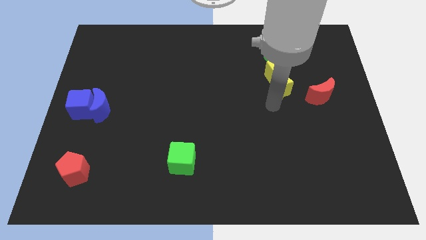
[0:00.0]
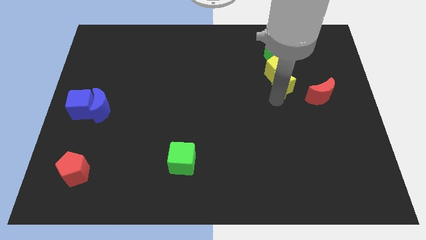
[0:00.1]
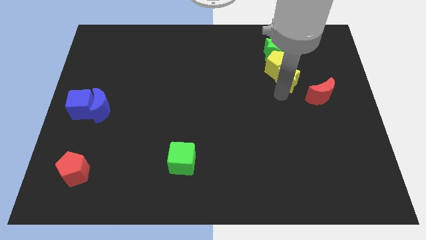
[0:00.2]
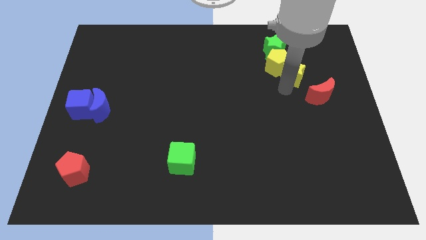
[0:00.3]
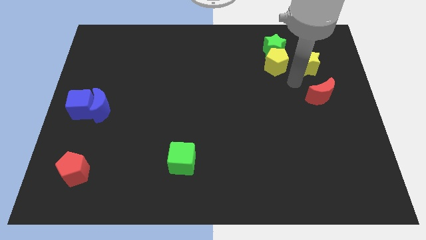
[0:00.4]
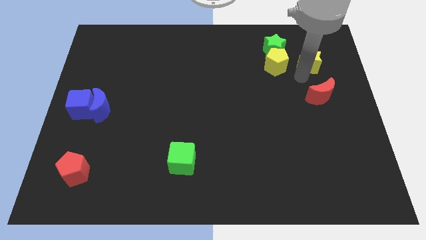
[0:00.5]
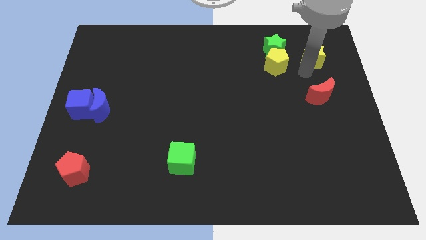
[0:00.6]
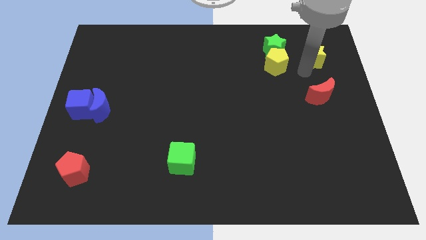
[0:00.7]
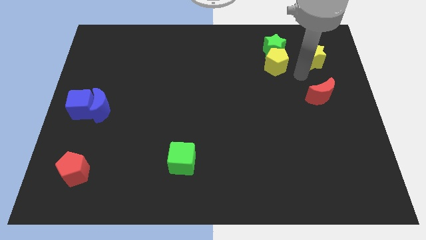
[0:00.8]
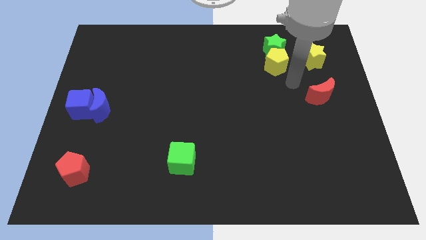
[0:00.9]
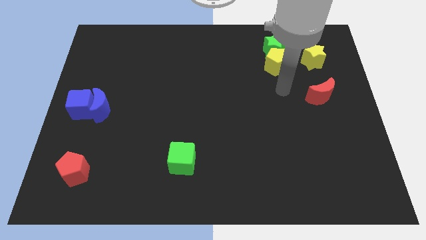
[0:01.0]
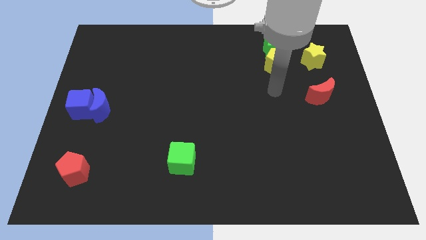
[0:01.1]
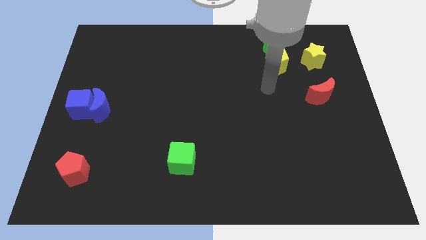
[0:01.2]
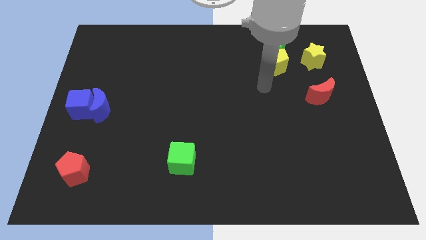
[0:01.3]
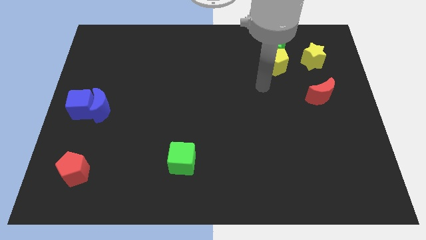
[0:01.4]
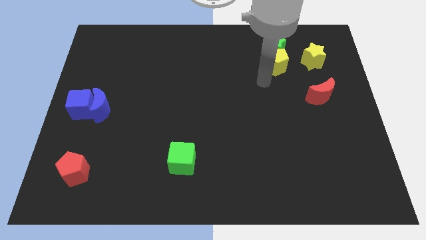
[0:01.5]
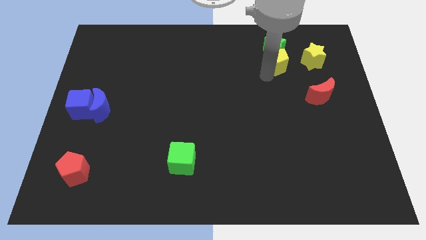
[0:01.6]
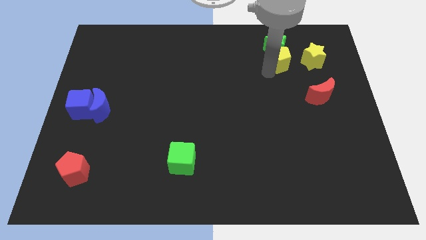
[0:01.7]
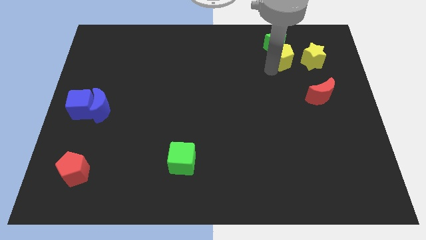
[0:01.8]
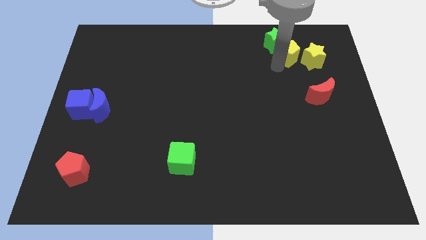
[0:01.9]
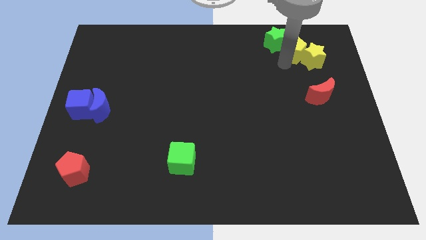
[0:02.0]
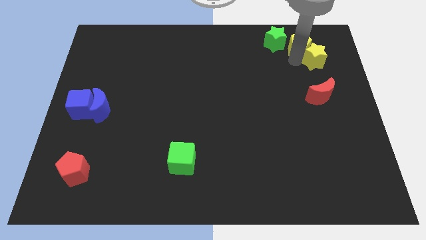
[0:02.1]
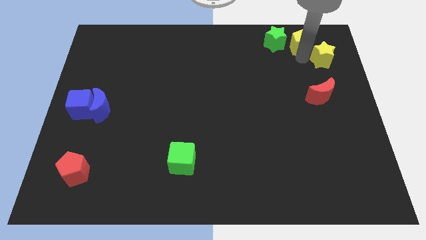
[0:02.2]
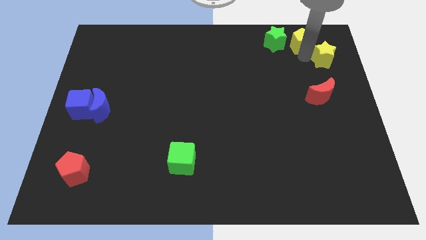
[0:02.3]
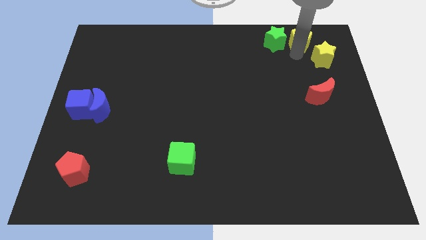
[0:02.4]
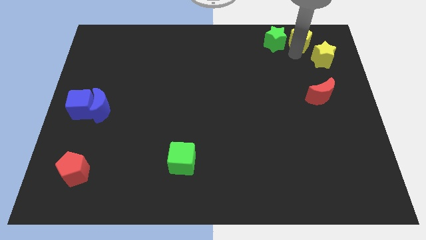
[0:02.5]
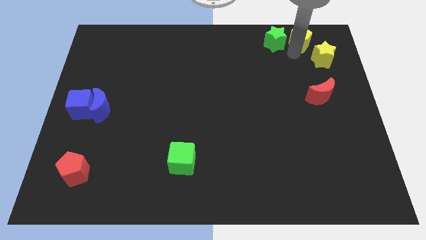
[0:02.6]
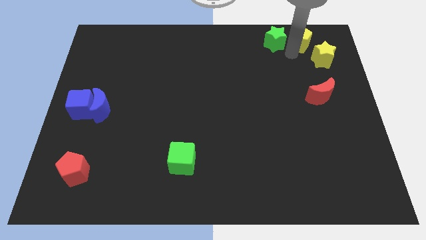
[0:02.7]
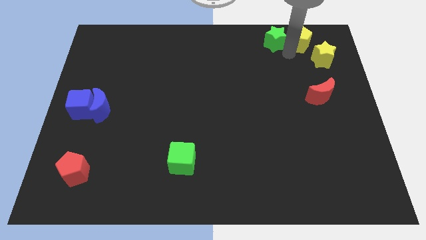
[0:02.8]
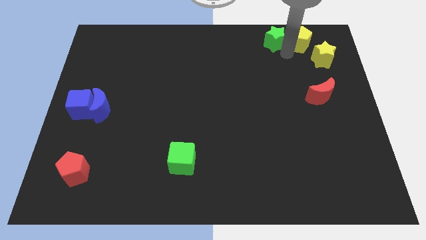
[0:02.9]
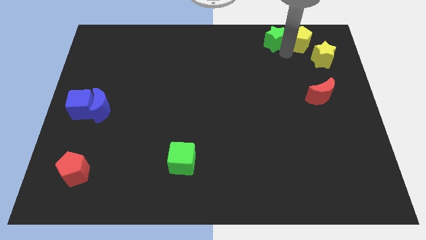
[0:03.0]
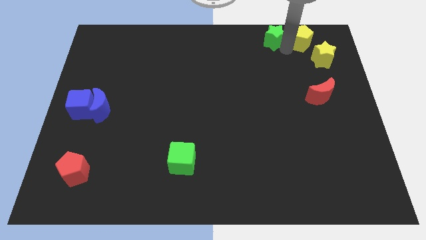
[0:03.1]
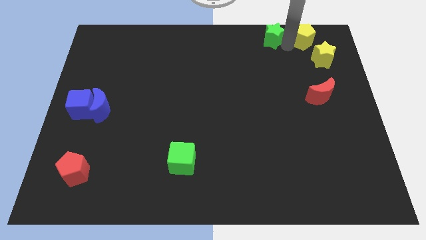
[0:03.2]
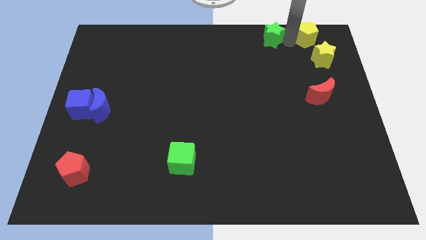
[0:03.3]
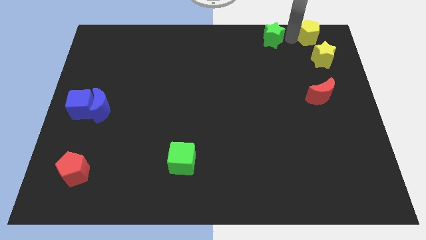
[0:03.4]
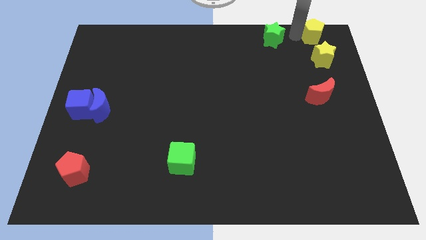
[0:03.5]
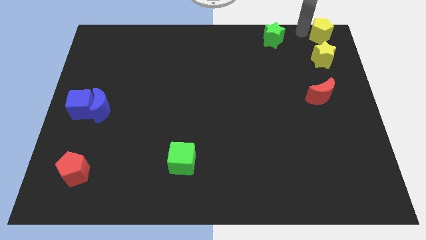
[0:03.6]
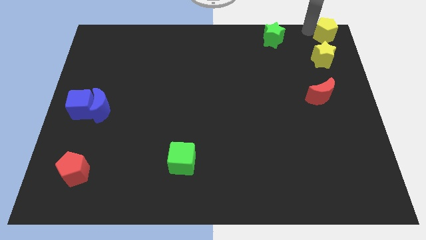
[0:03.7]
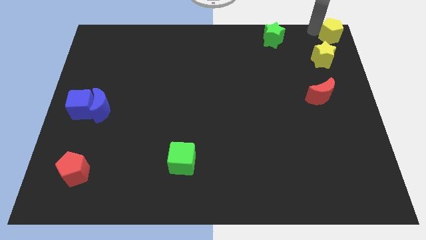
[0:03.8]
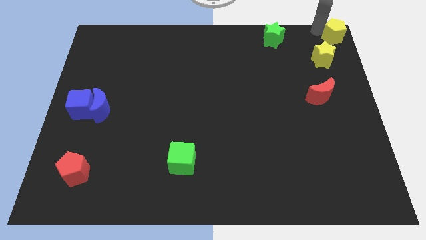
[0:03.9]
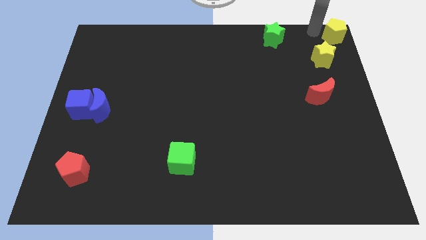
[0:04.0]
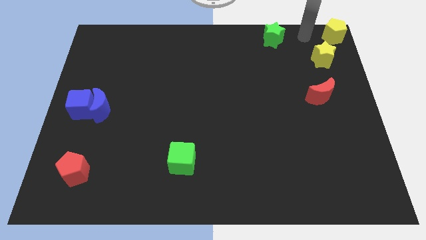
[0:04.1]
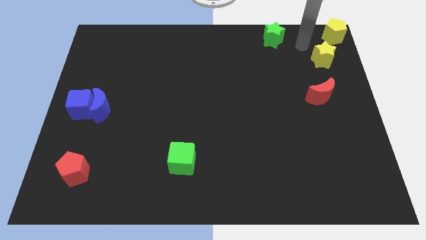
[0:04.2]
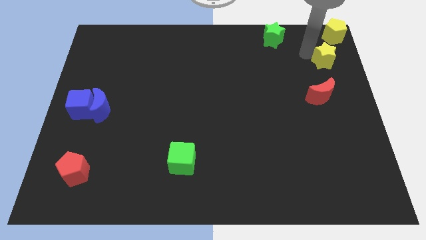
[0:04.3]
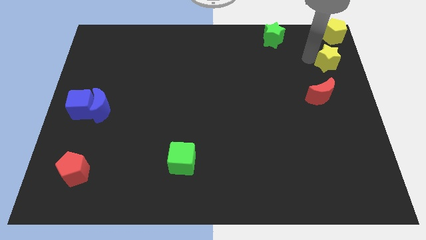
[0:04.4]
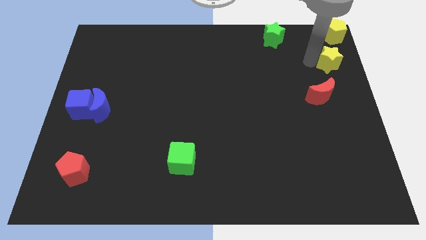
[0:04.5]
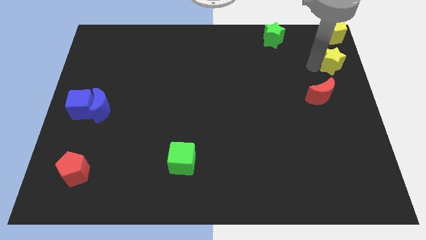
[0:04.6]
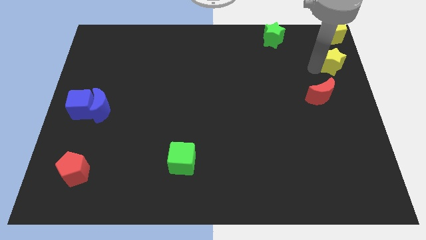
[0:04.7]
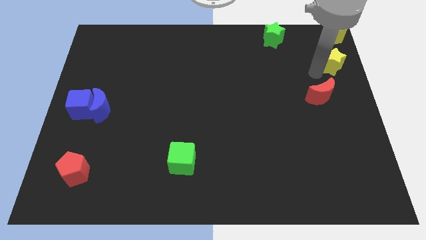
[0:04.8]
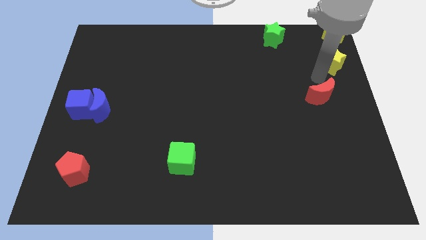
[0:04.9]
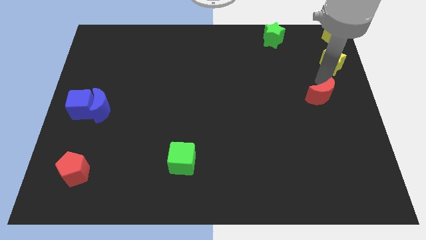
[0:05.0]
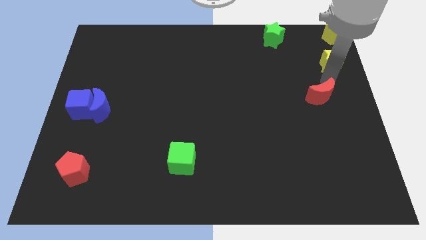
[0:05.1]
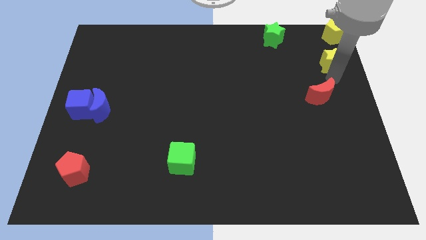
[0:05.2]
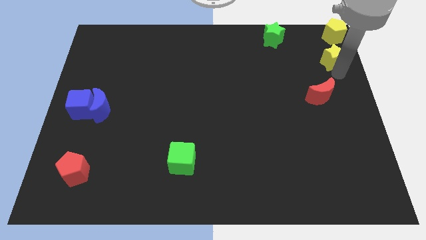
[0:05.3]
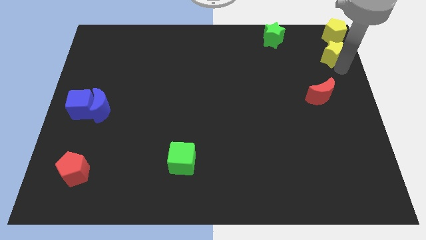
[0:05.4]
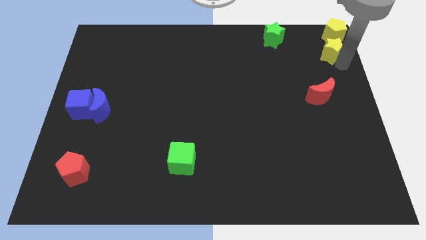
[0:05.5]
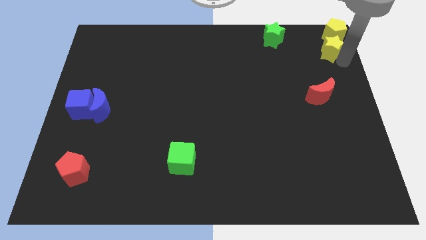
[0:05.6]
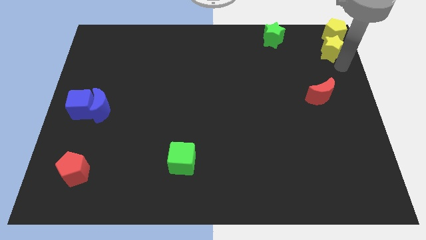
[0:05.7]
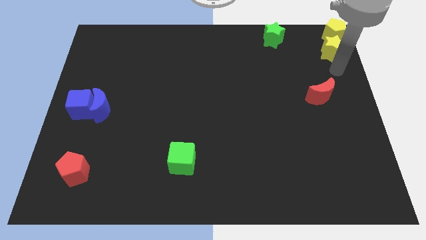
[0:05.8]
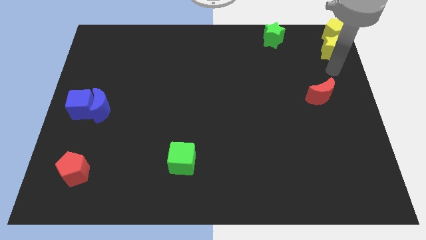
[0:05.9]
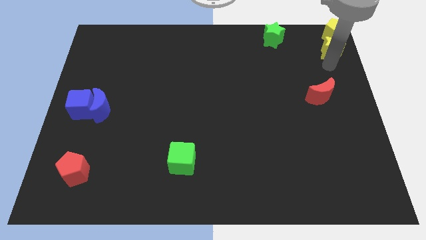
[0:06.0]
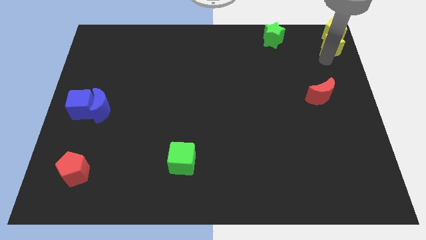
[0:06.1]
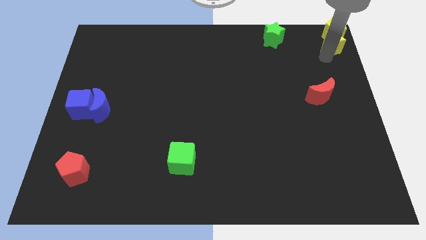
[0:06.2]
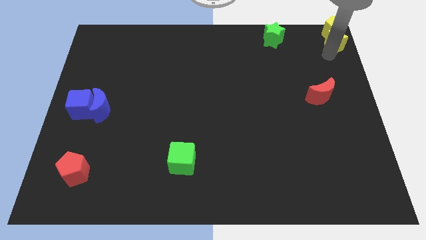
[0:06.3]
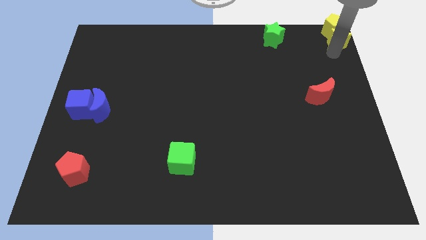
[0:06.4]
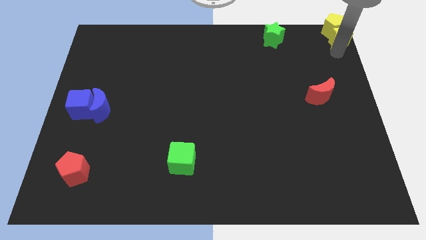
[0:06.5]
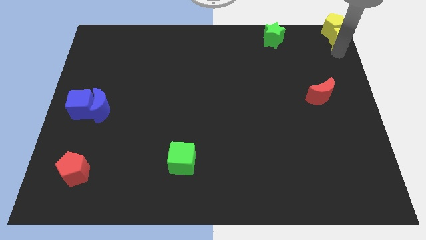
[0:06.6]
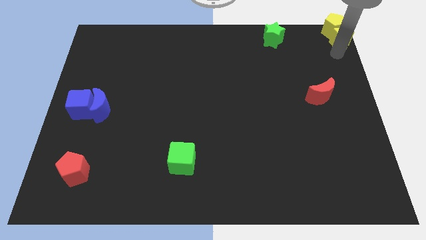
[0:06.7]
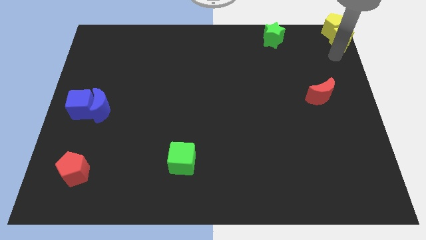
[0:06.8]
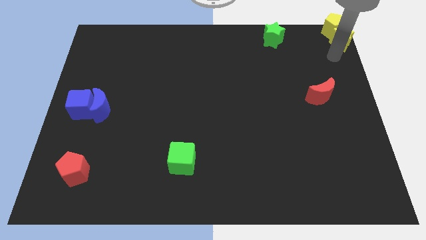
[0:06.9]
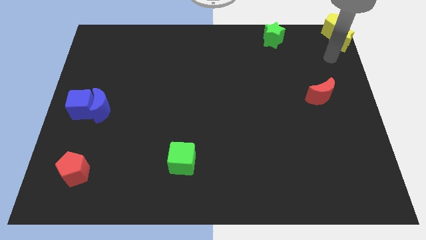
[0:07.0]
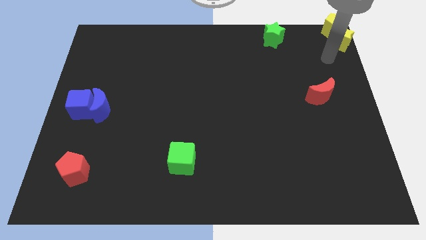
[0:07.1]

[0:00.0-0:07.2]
place the yellow blocks together at the top right corner of the board

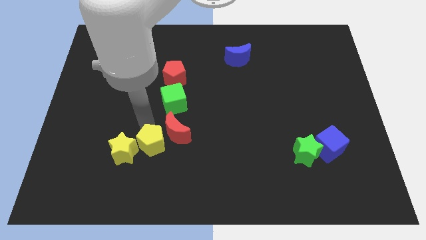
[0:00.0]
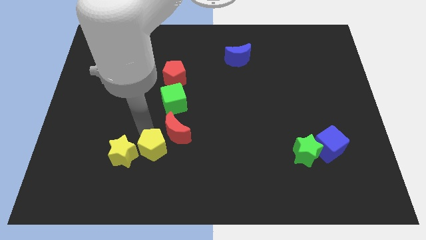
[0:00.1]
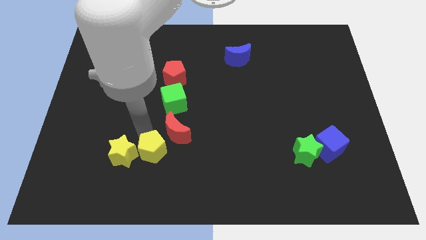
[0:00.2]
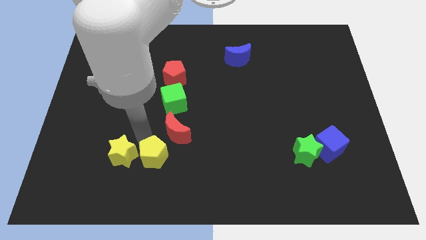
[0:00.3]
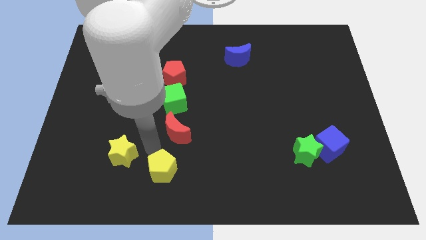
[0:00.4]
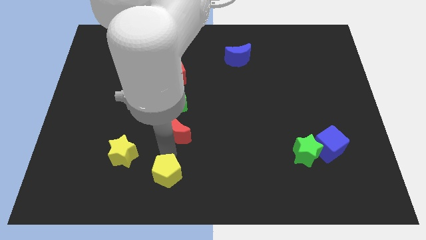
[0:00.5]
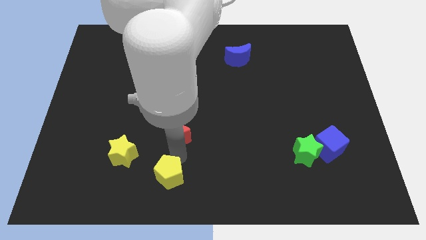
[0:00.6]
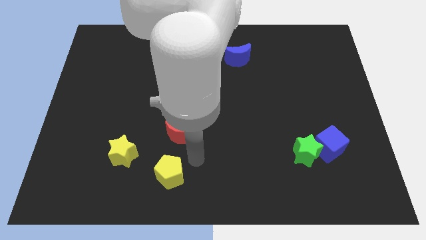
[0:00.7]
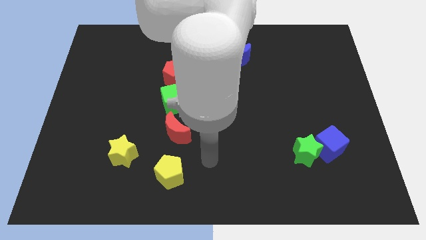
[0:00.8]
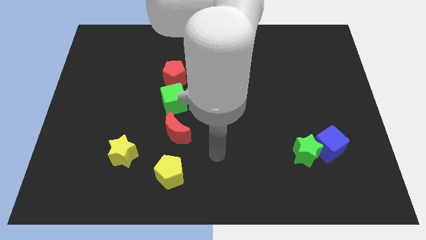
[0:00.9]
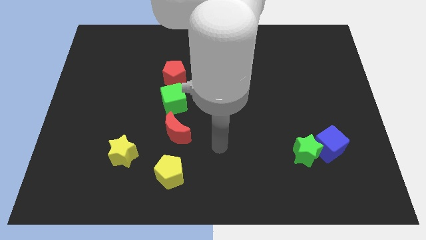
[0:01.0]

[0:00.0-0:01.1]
separate yellow pentagon from the yellow star

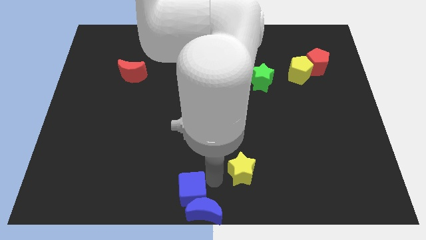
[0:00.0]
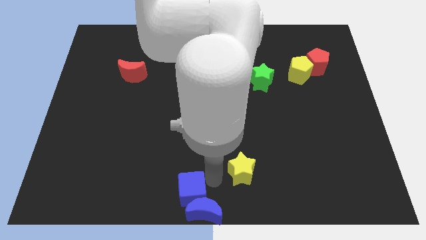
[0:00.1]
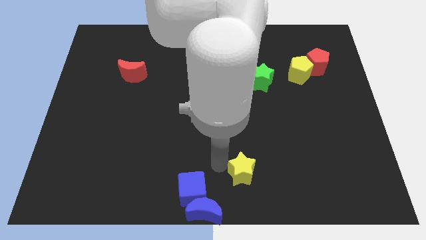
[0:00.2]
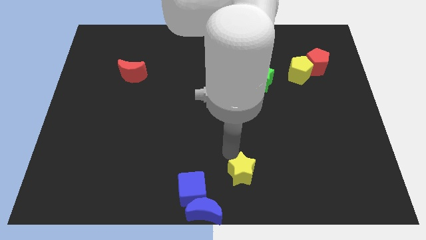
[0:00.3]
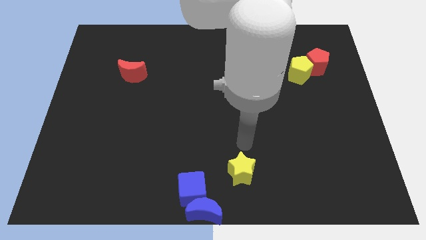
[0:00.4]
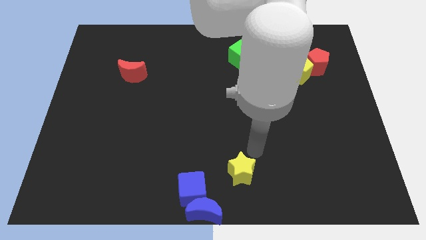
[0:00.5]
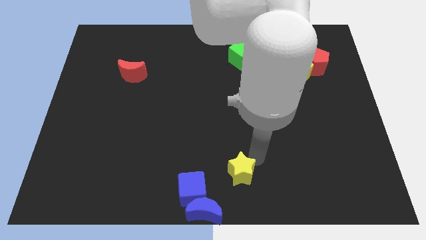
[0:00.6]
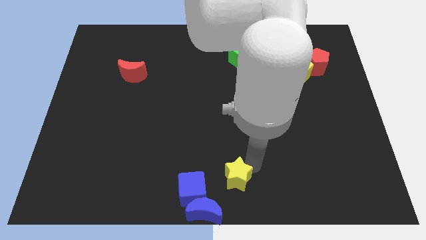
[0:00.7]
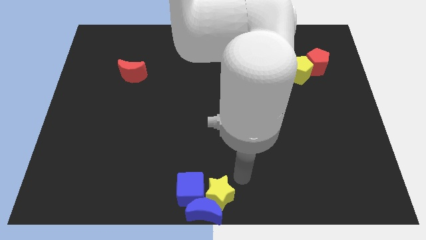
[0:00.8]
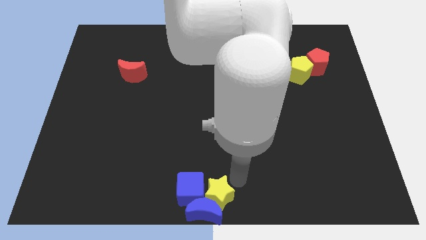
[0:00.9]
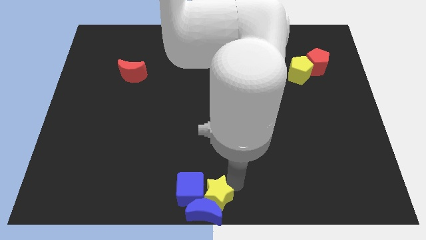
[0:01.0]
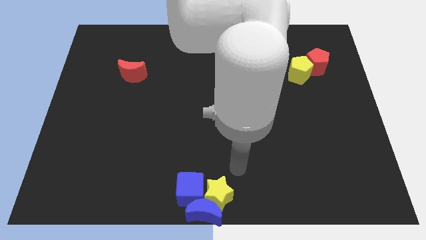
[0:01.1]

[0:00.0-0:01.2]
push the yellow star into group of blue blocks
